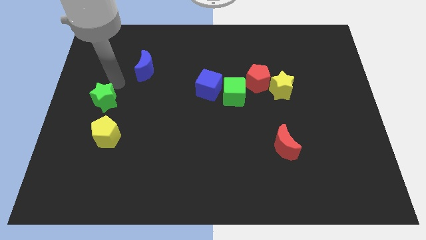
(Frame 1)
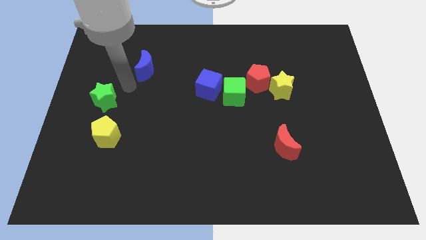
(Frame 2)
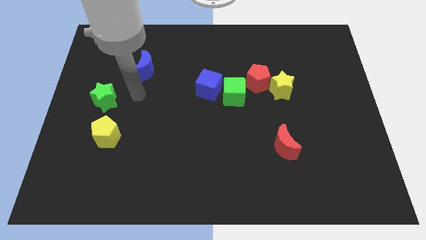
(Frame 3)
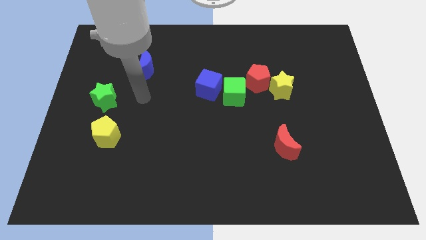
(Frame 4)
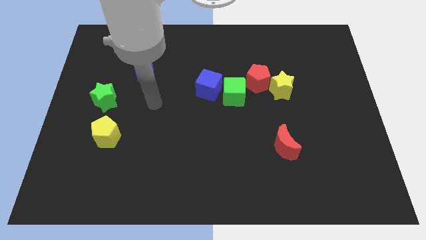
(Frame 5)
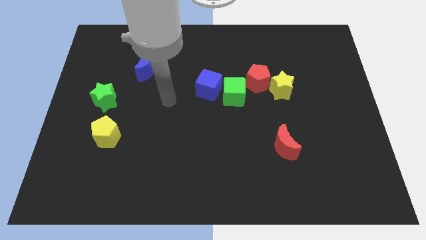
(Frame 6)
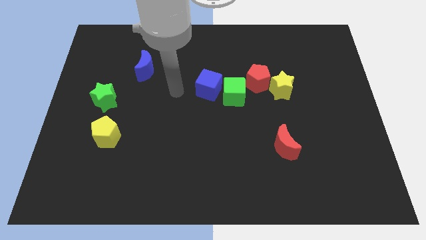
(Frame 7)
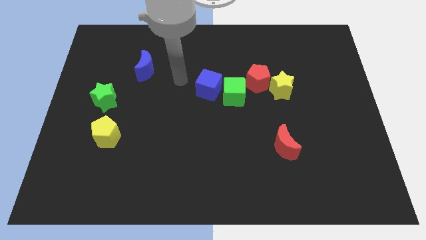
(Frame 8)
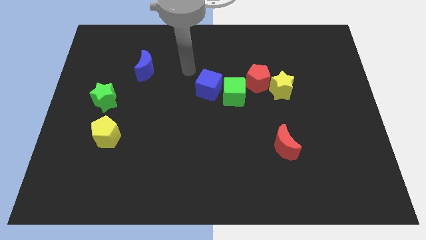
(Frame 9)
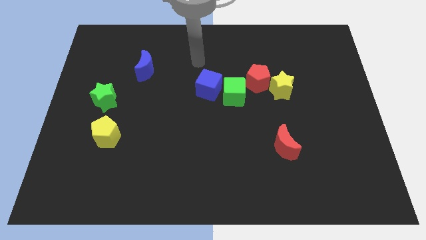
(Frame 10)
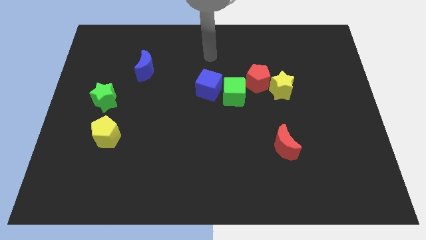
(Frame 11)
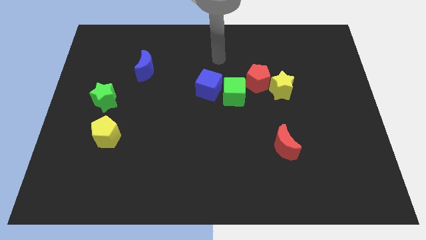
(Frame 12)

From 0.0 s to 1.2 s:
place your arm above the blue cube

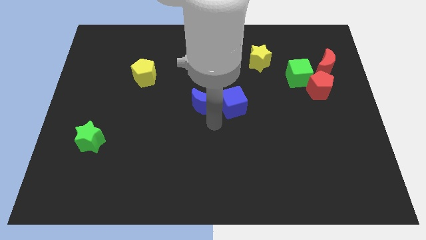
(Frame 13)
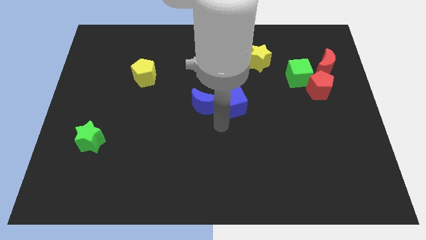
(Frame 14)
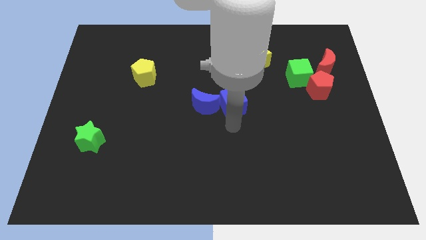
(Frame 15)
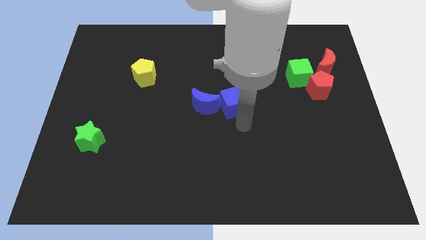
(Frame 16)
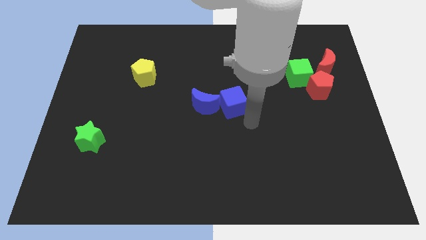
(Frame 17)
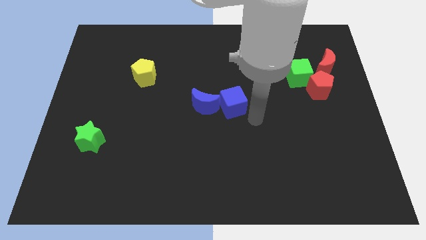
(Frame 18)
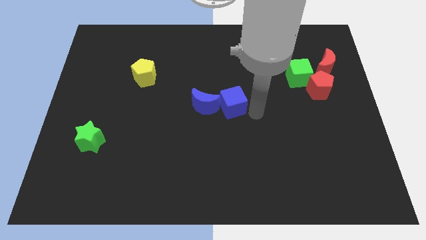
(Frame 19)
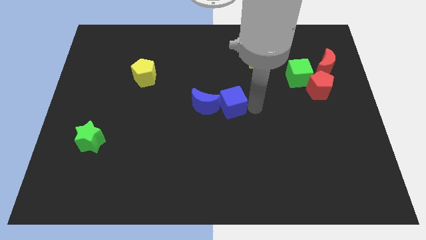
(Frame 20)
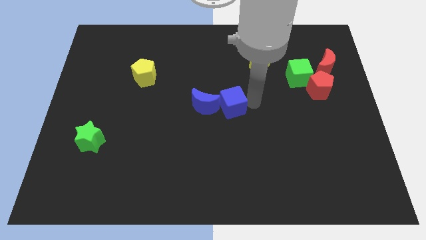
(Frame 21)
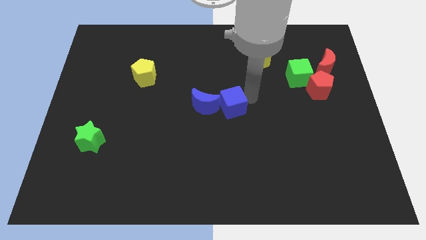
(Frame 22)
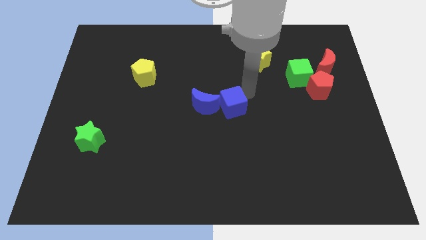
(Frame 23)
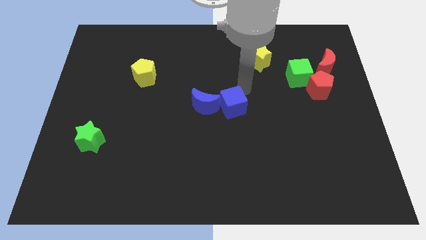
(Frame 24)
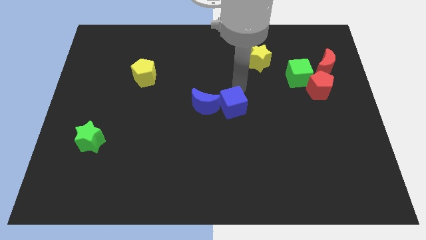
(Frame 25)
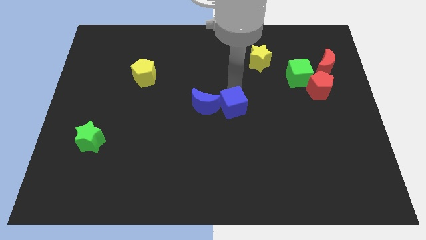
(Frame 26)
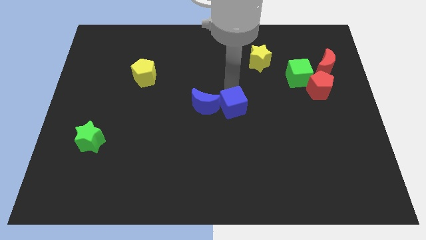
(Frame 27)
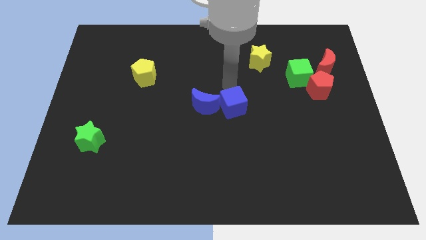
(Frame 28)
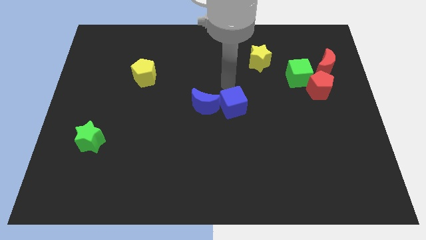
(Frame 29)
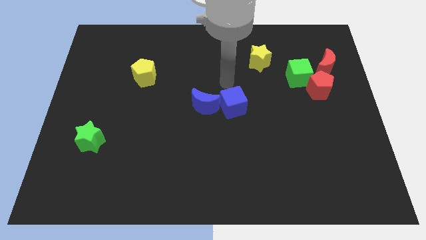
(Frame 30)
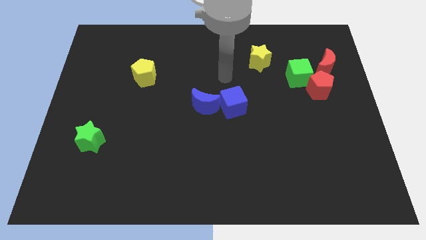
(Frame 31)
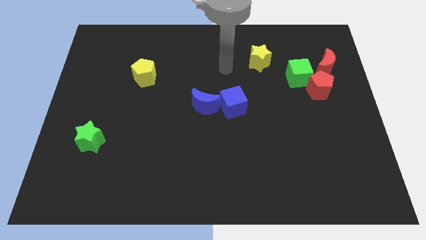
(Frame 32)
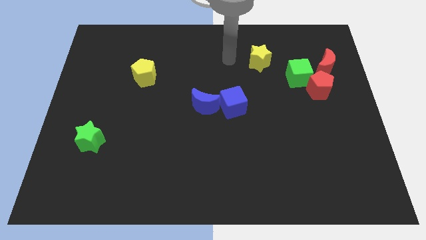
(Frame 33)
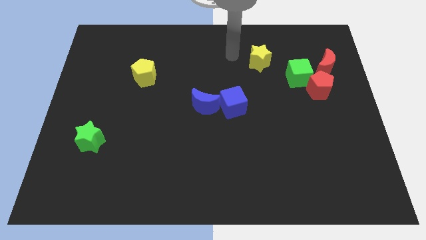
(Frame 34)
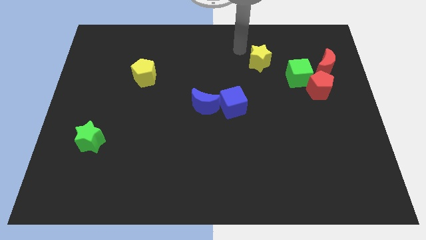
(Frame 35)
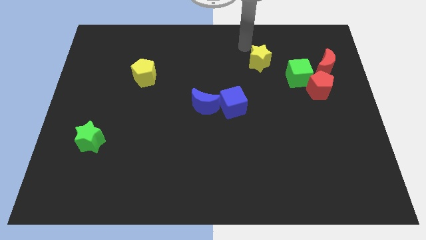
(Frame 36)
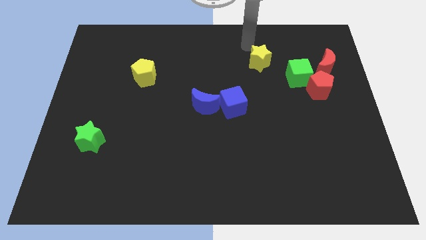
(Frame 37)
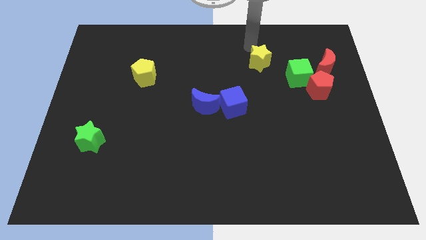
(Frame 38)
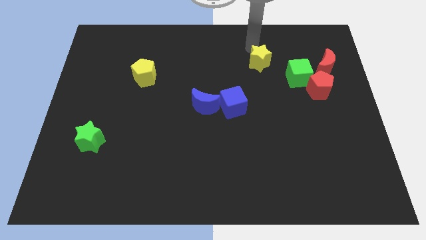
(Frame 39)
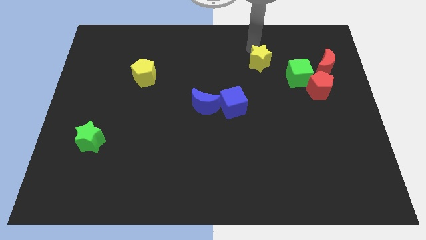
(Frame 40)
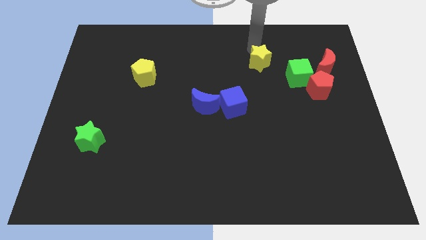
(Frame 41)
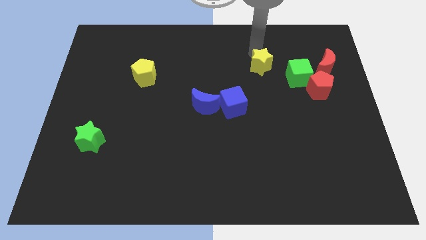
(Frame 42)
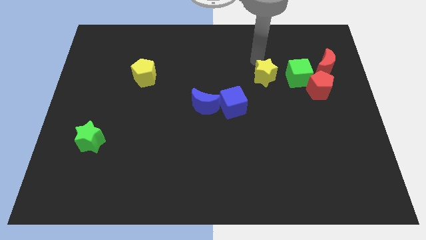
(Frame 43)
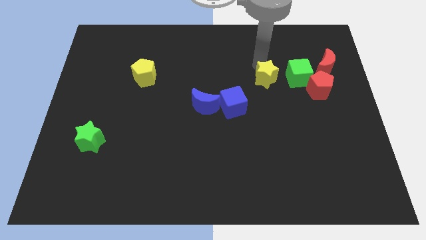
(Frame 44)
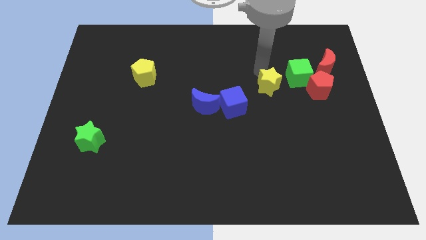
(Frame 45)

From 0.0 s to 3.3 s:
move the yellow star to the left of the green cube

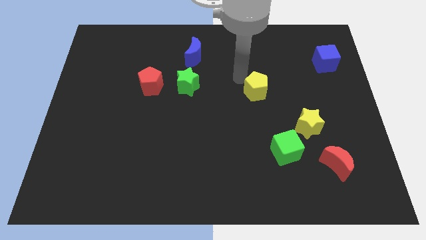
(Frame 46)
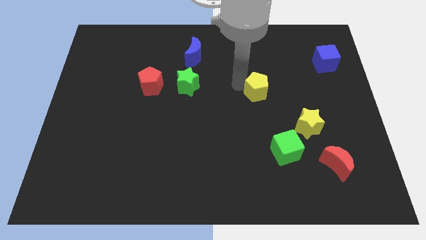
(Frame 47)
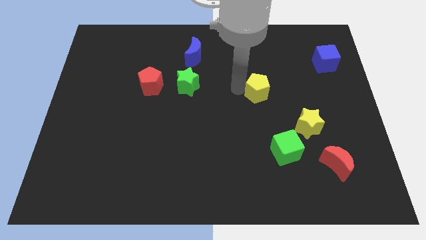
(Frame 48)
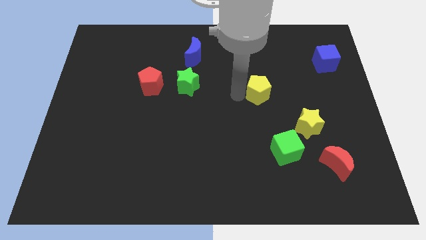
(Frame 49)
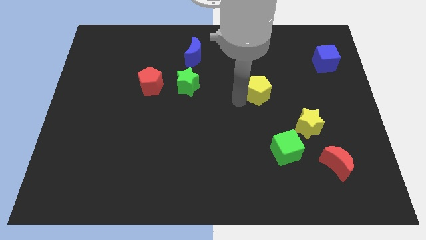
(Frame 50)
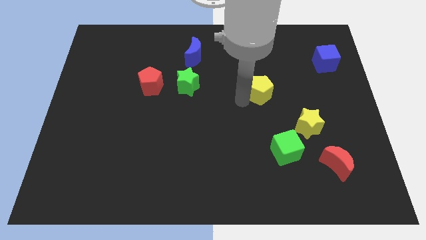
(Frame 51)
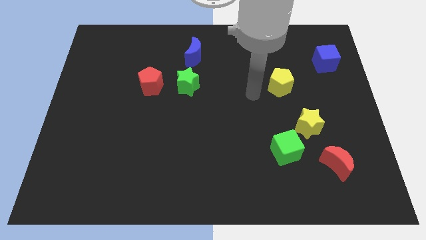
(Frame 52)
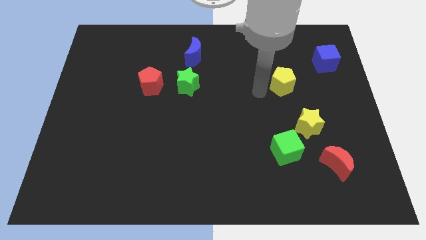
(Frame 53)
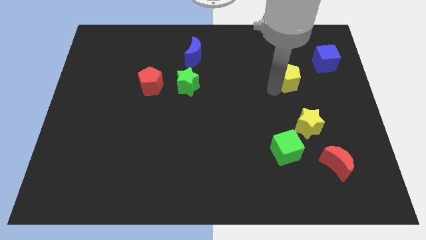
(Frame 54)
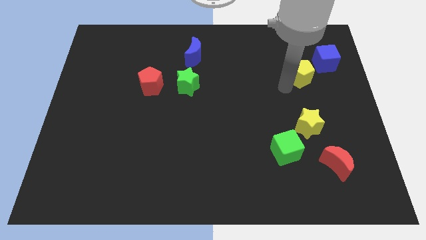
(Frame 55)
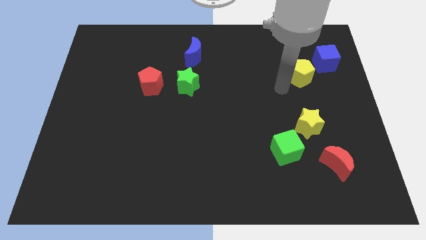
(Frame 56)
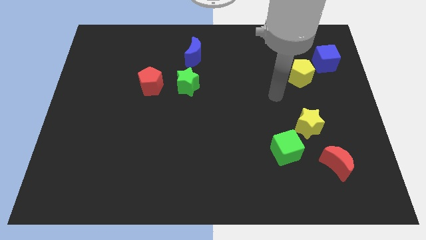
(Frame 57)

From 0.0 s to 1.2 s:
move the yellow pentagon closer to the blue cube

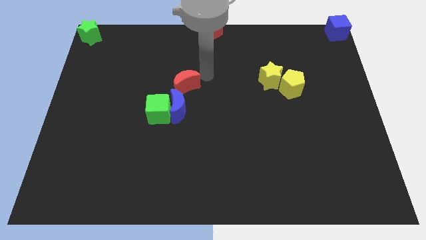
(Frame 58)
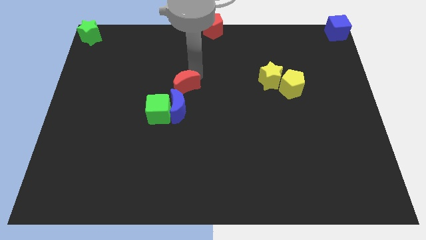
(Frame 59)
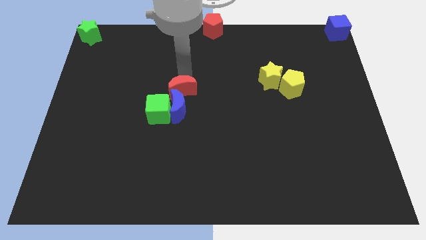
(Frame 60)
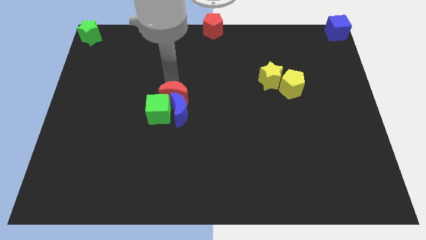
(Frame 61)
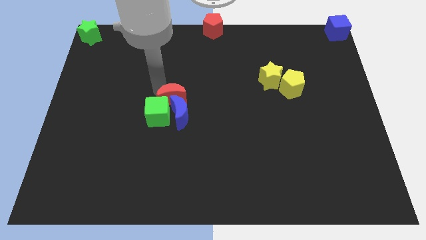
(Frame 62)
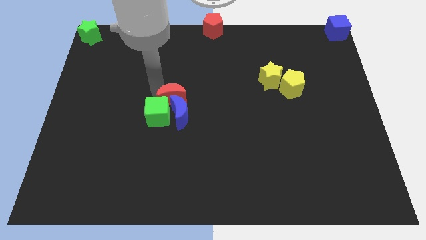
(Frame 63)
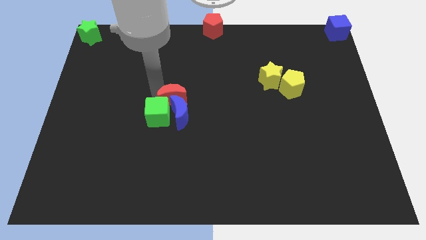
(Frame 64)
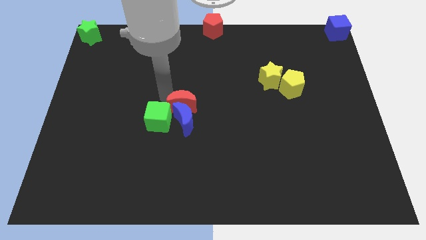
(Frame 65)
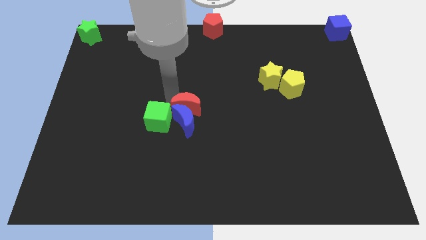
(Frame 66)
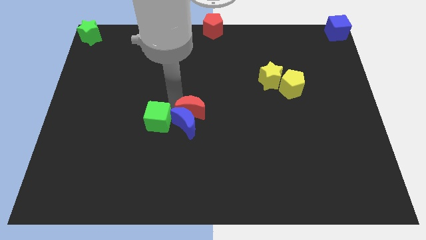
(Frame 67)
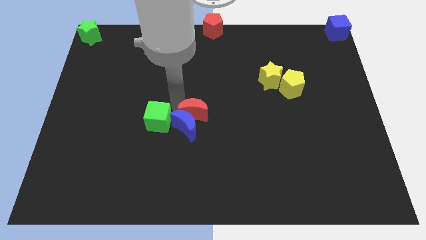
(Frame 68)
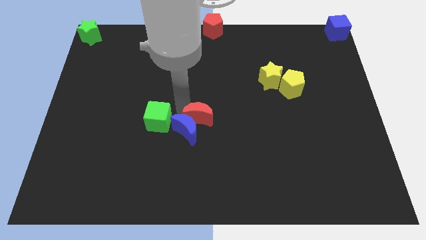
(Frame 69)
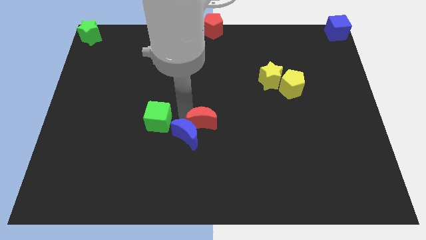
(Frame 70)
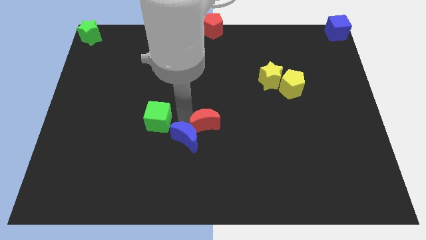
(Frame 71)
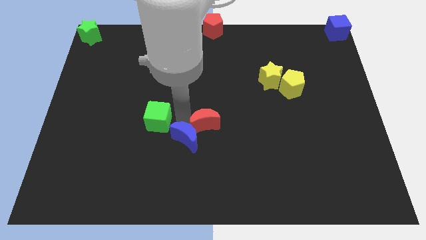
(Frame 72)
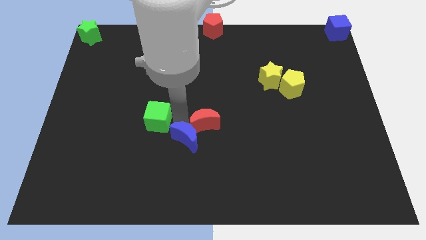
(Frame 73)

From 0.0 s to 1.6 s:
separate green cube and blue moon

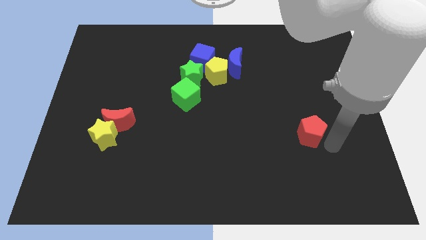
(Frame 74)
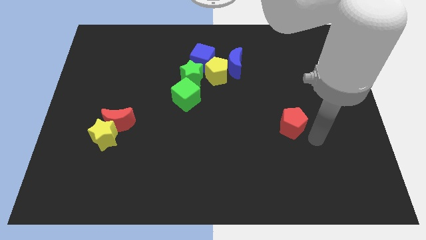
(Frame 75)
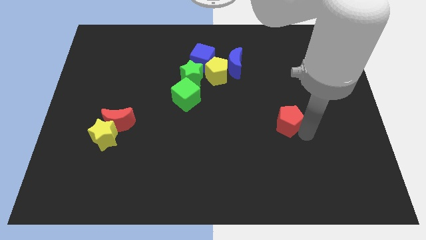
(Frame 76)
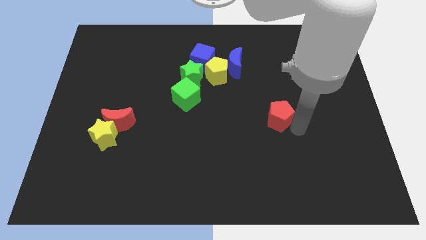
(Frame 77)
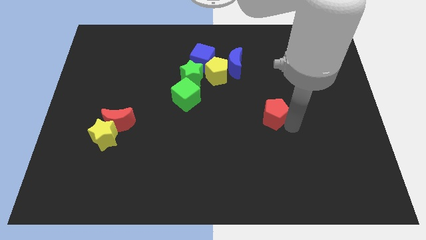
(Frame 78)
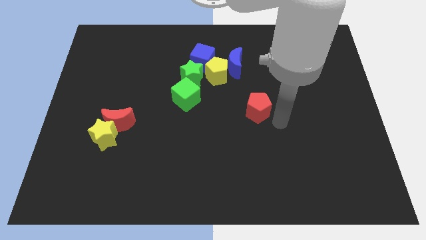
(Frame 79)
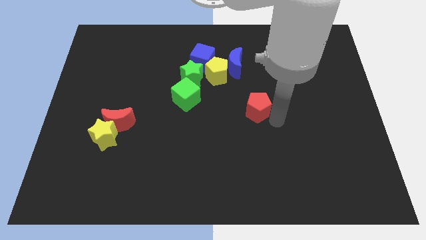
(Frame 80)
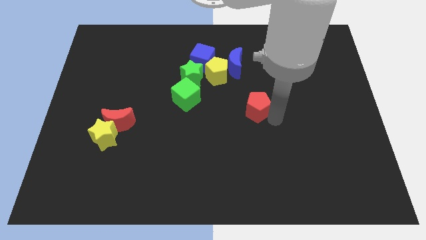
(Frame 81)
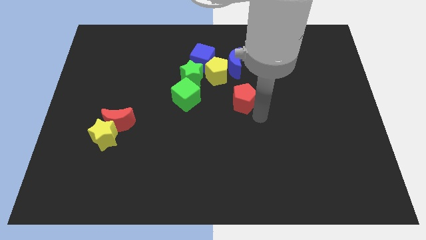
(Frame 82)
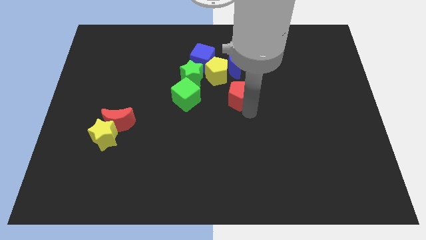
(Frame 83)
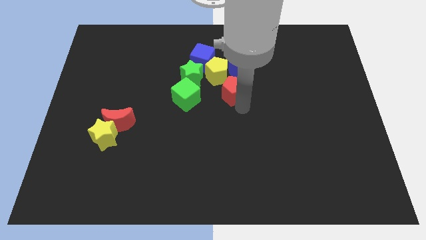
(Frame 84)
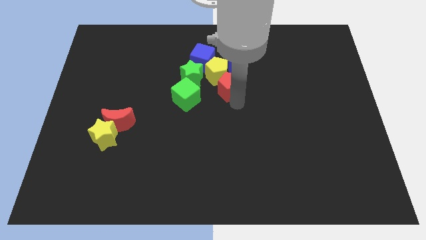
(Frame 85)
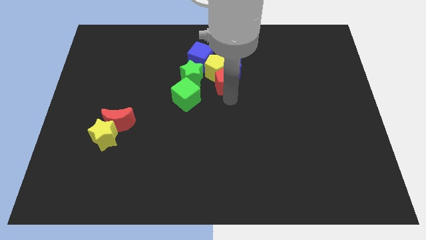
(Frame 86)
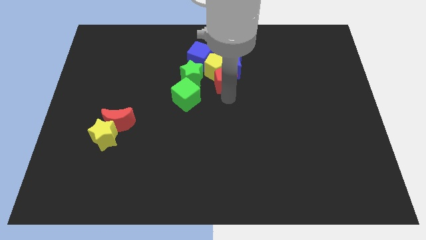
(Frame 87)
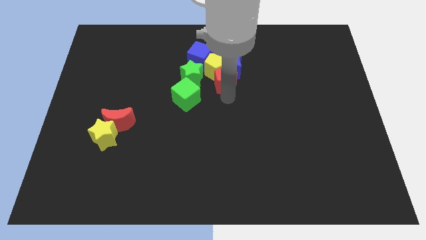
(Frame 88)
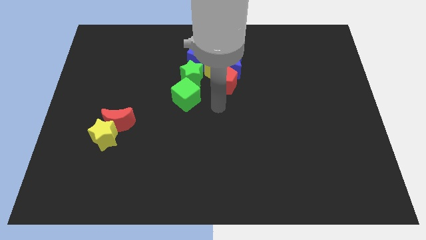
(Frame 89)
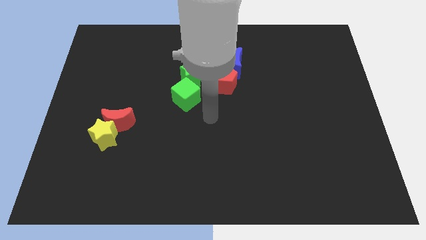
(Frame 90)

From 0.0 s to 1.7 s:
push the red pentagon into yellow pentagon
